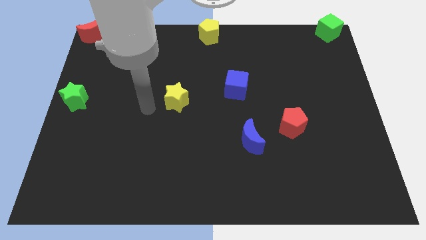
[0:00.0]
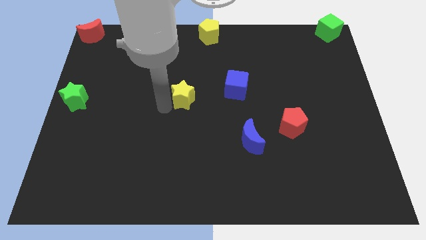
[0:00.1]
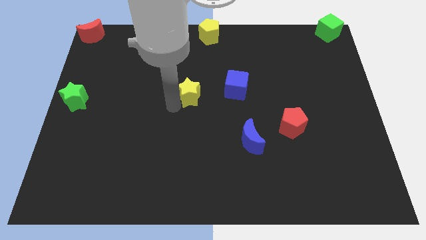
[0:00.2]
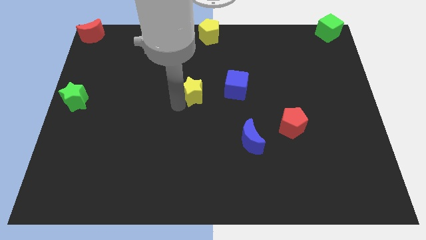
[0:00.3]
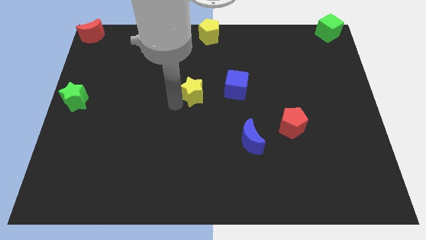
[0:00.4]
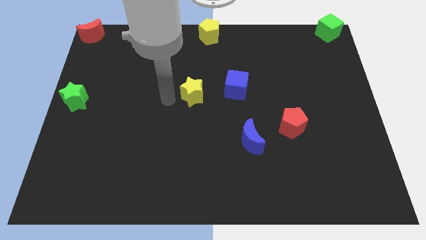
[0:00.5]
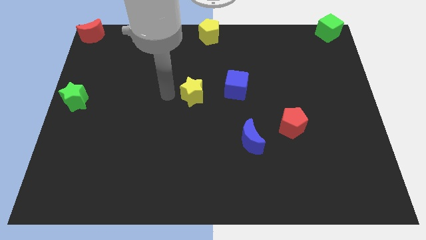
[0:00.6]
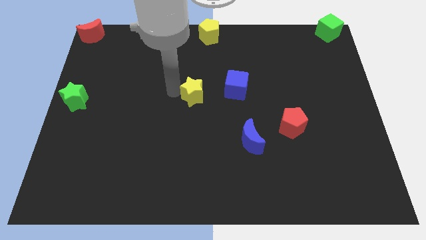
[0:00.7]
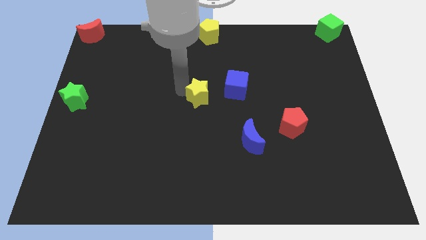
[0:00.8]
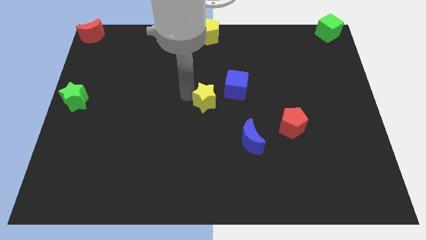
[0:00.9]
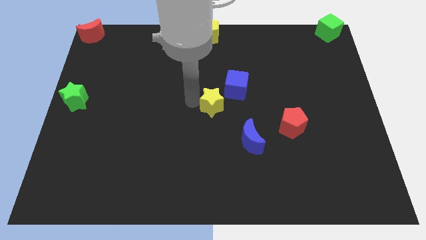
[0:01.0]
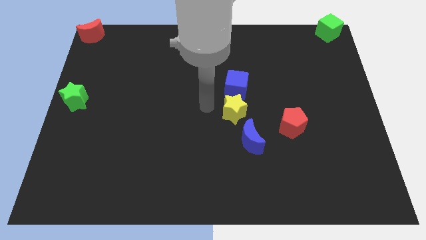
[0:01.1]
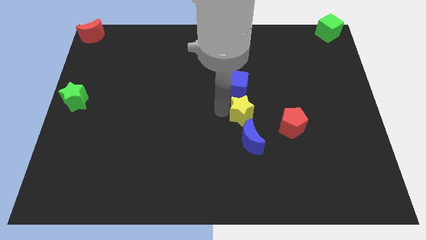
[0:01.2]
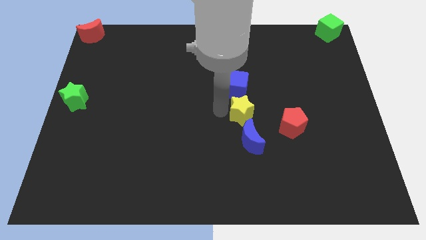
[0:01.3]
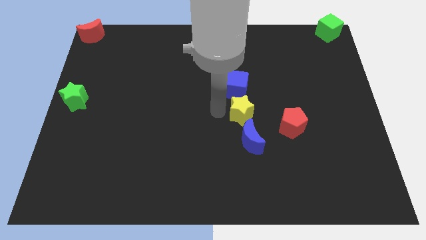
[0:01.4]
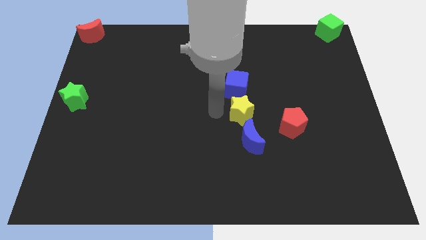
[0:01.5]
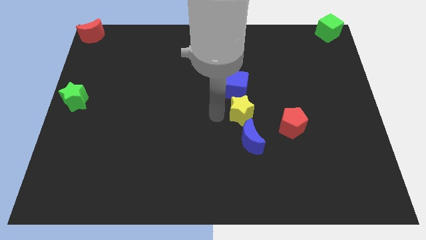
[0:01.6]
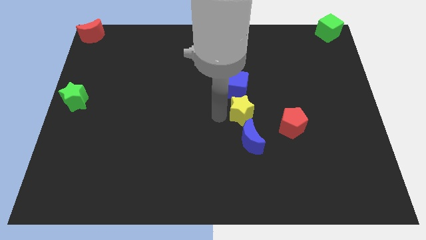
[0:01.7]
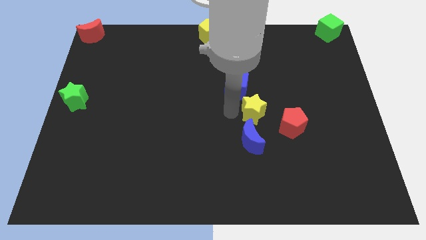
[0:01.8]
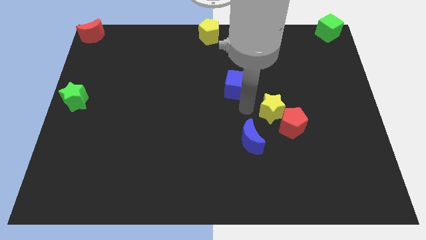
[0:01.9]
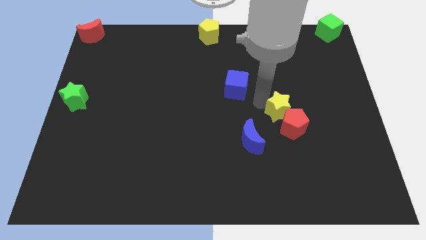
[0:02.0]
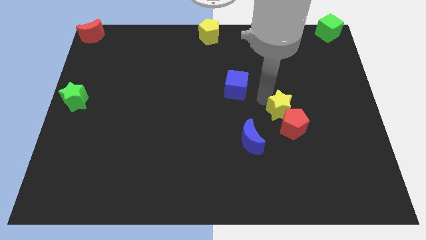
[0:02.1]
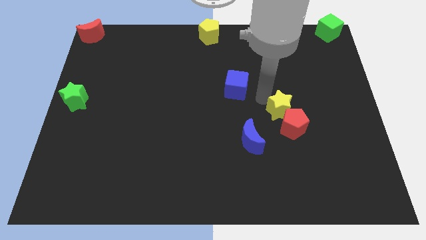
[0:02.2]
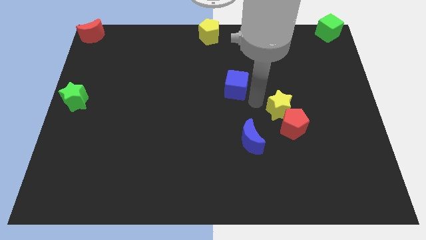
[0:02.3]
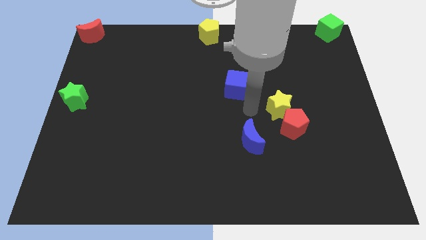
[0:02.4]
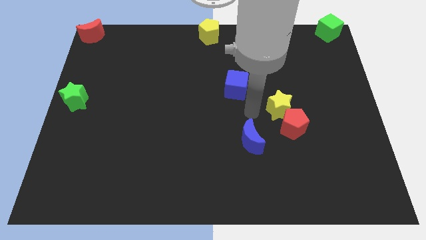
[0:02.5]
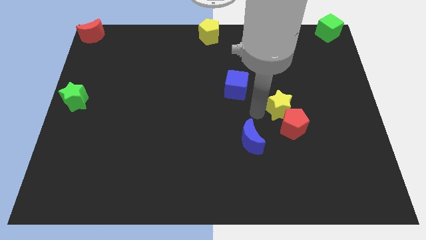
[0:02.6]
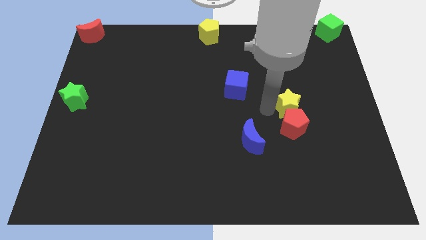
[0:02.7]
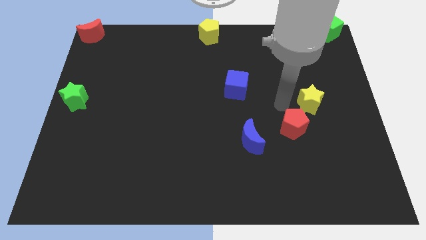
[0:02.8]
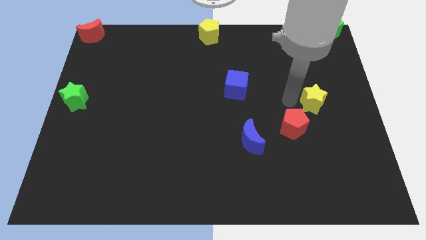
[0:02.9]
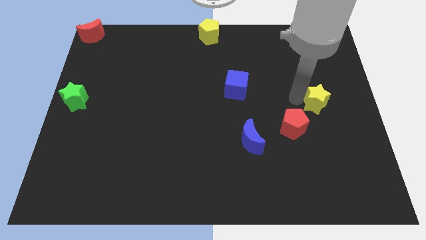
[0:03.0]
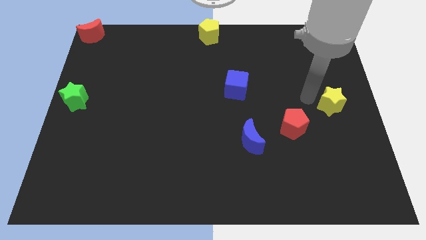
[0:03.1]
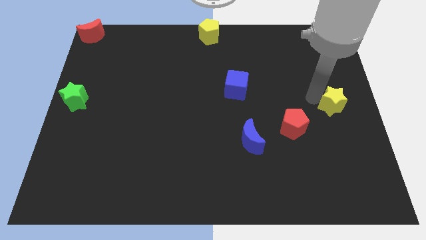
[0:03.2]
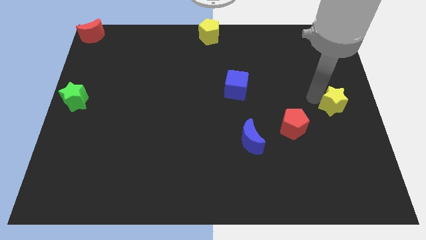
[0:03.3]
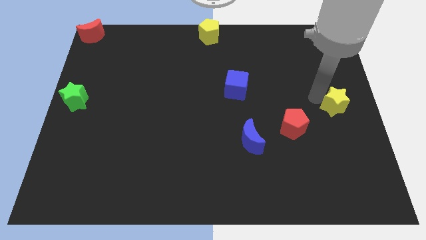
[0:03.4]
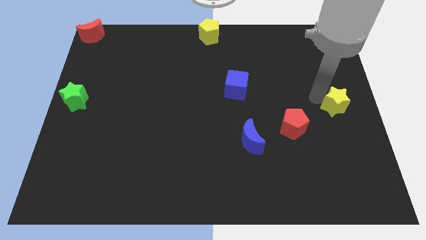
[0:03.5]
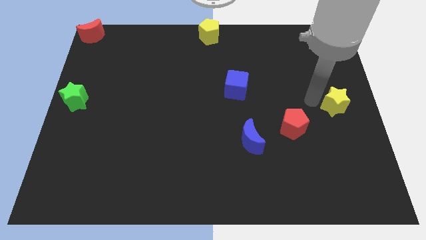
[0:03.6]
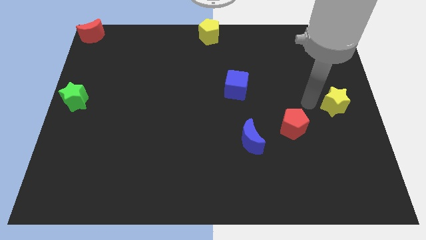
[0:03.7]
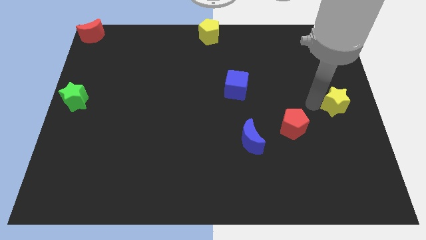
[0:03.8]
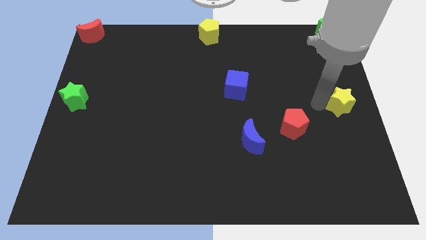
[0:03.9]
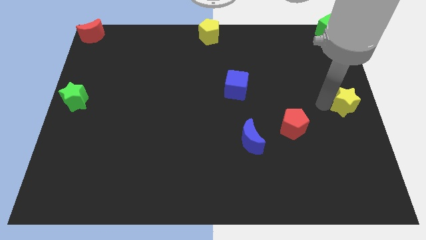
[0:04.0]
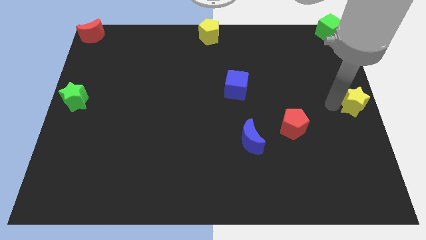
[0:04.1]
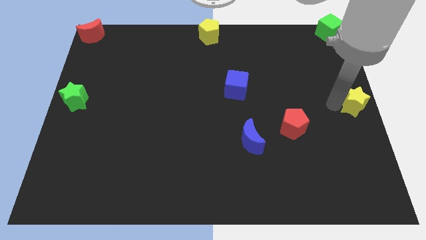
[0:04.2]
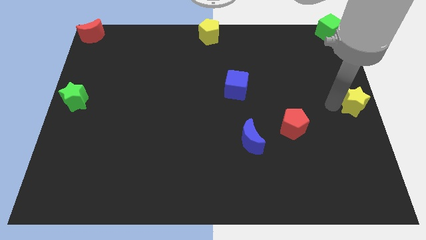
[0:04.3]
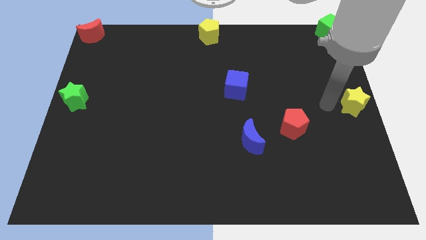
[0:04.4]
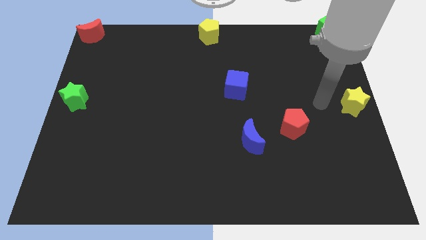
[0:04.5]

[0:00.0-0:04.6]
push the yellow star towards the right center of the board

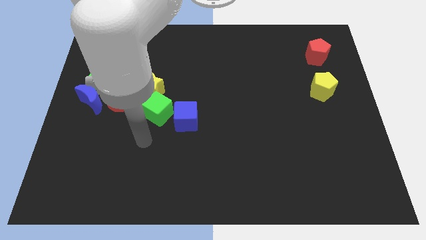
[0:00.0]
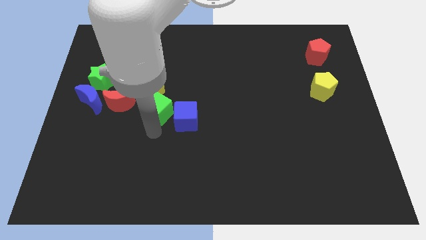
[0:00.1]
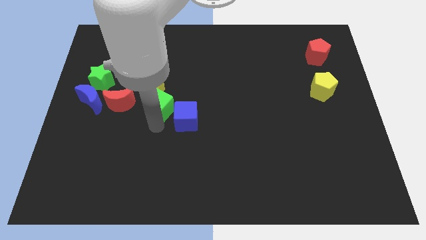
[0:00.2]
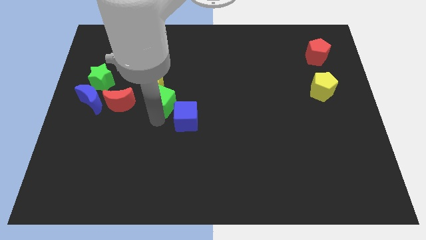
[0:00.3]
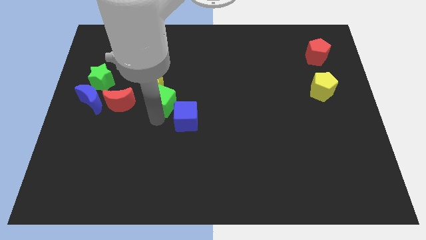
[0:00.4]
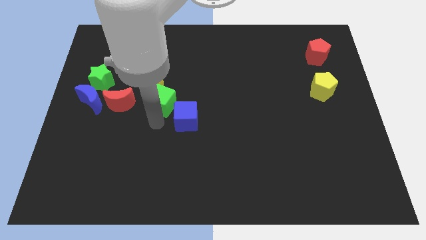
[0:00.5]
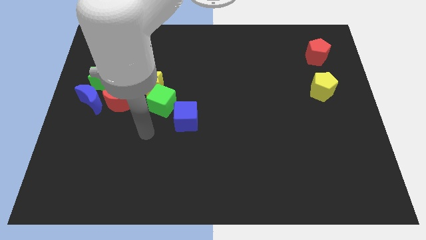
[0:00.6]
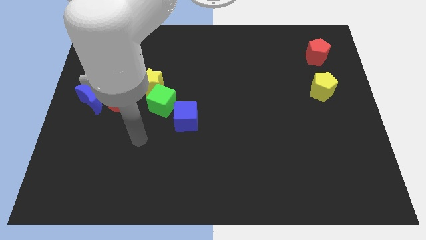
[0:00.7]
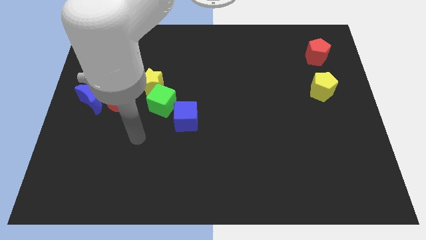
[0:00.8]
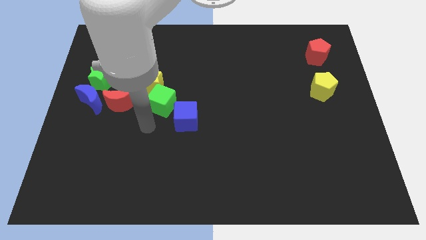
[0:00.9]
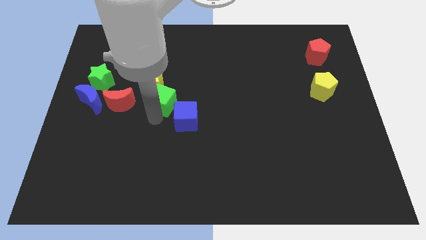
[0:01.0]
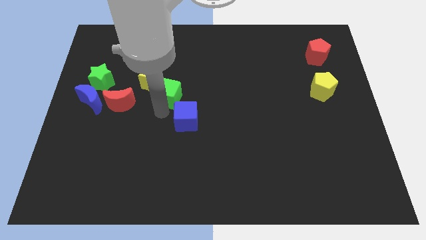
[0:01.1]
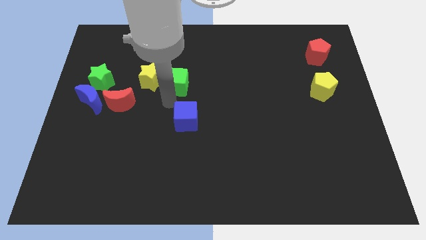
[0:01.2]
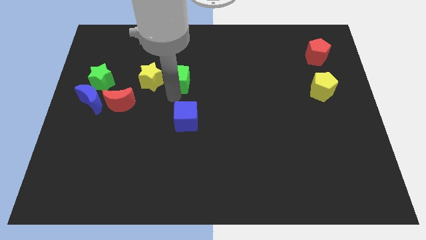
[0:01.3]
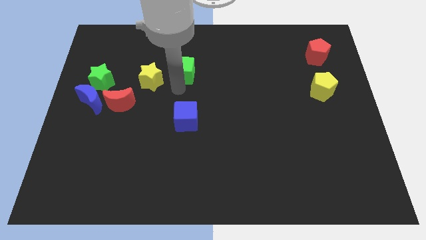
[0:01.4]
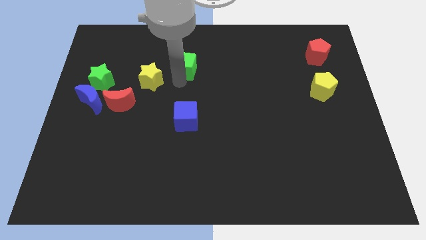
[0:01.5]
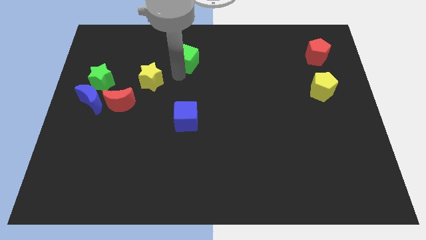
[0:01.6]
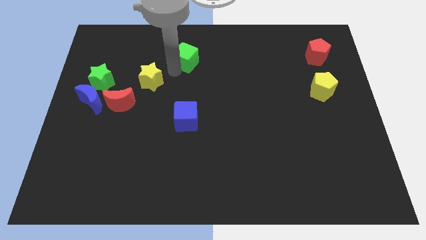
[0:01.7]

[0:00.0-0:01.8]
place the green cube to the left of the red pentagon

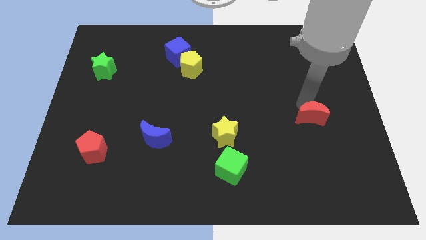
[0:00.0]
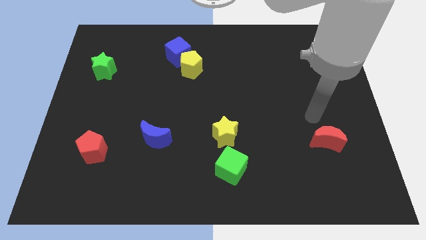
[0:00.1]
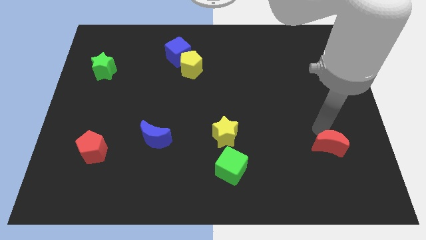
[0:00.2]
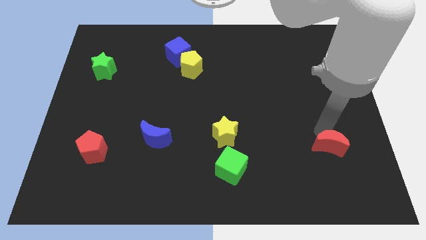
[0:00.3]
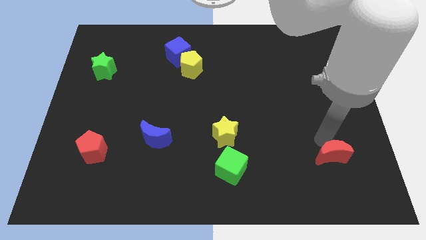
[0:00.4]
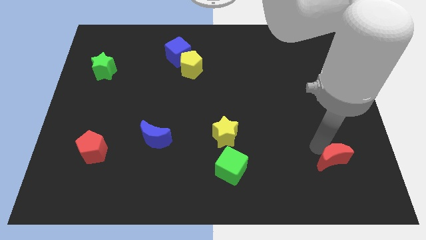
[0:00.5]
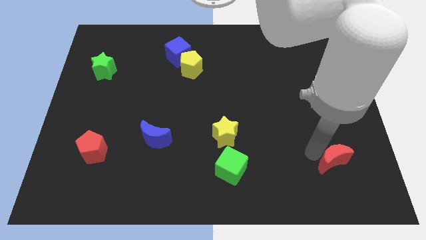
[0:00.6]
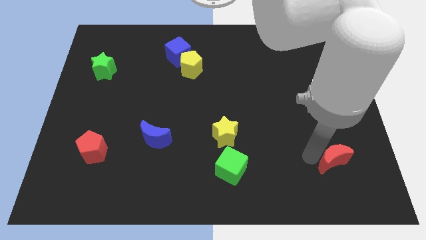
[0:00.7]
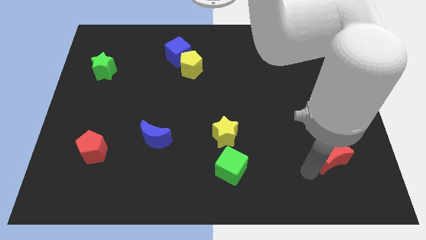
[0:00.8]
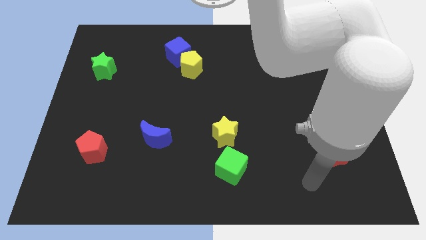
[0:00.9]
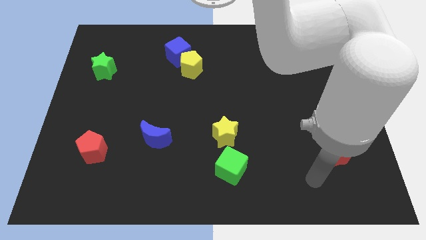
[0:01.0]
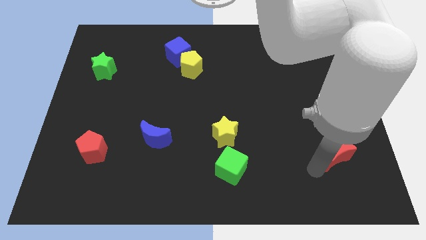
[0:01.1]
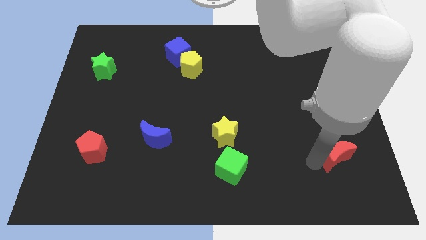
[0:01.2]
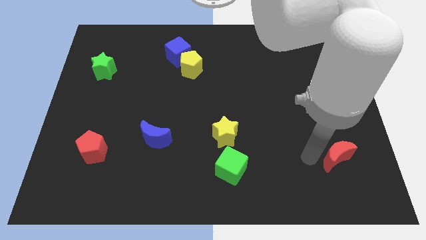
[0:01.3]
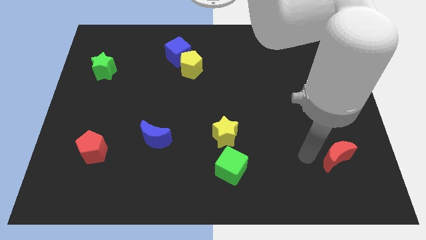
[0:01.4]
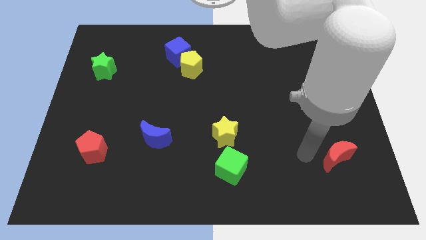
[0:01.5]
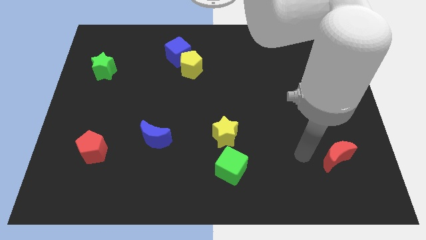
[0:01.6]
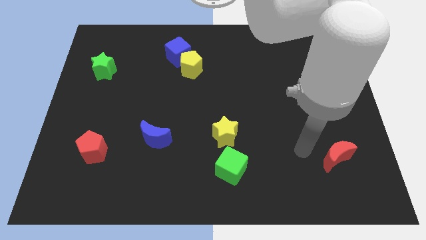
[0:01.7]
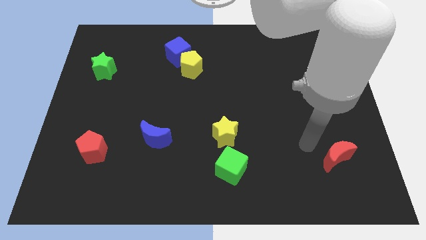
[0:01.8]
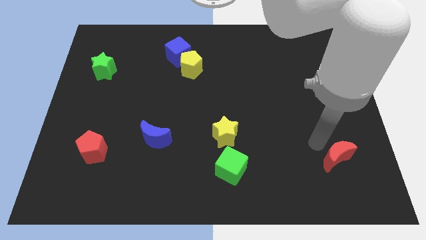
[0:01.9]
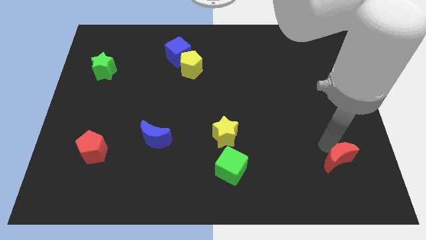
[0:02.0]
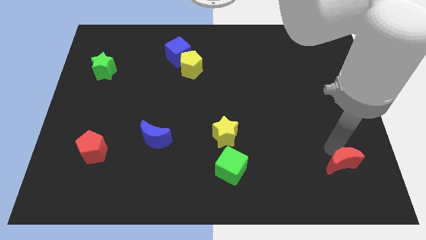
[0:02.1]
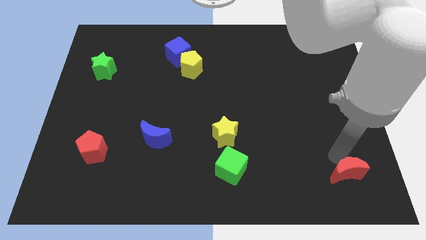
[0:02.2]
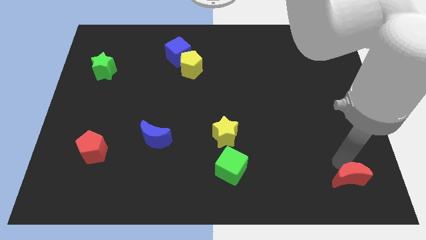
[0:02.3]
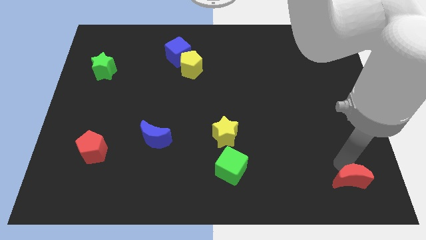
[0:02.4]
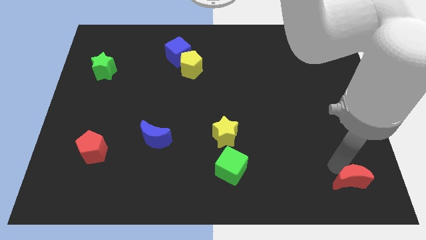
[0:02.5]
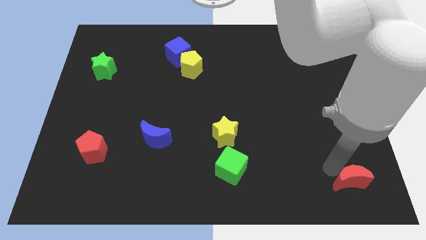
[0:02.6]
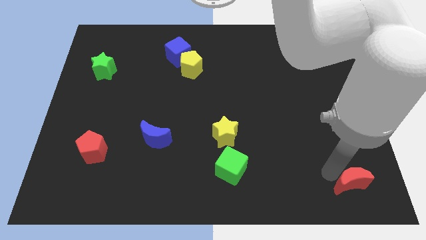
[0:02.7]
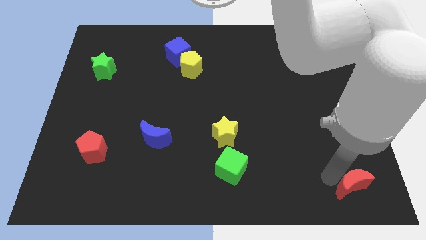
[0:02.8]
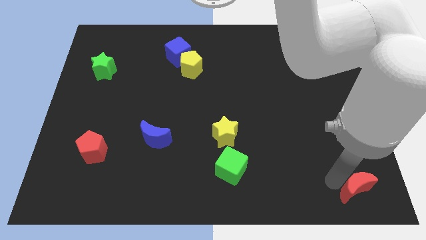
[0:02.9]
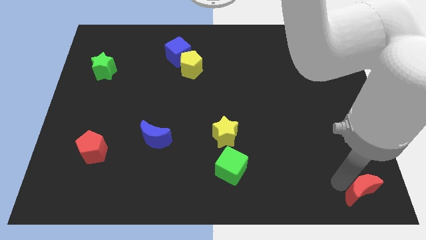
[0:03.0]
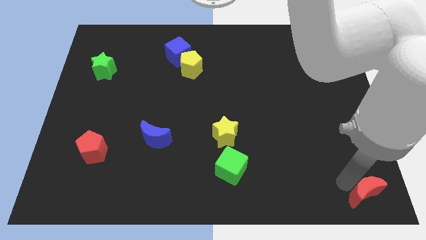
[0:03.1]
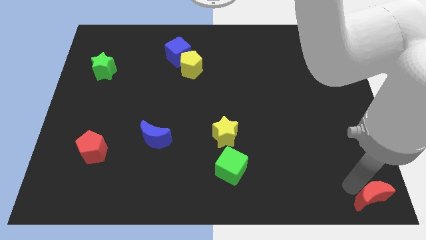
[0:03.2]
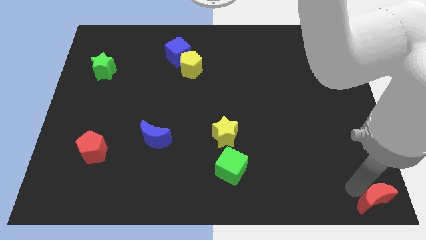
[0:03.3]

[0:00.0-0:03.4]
push the red moon near to the bottom right corner
